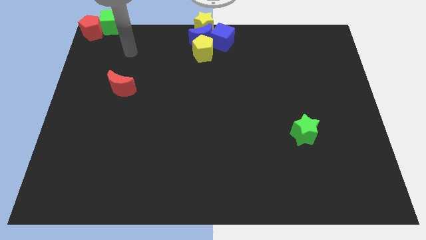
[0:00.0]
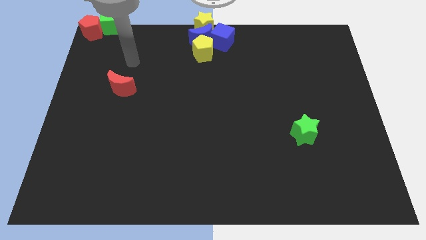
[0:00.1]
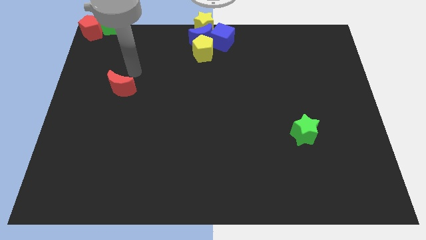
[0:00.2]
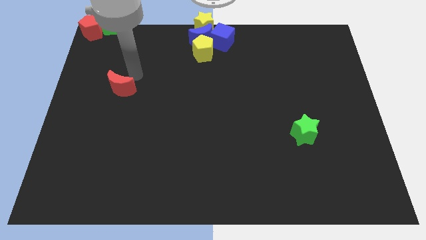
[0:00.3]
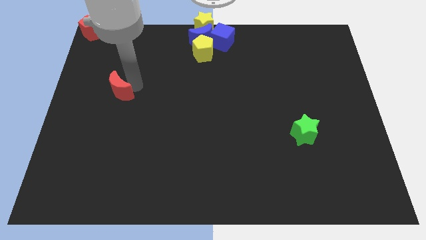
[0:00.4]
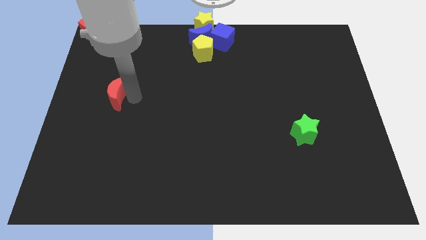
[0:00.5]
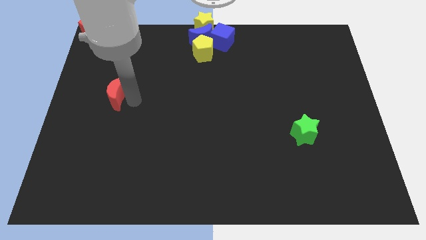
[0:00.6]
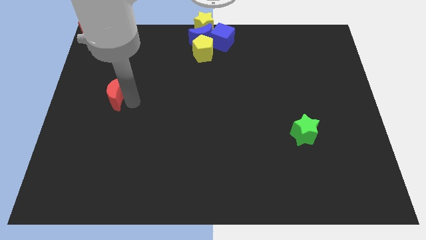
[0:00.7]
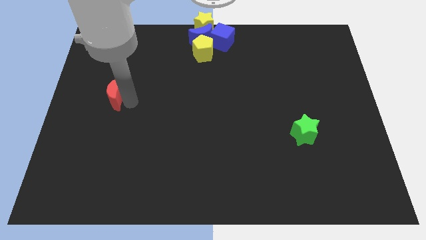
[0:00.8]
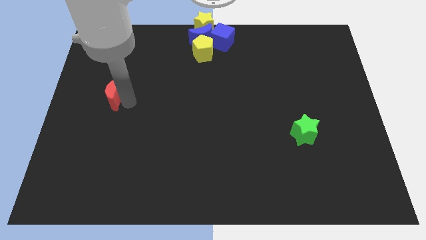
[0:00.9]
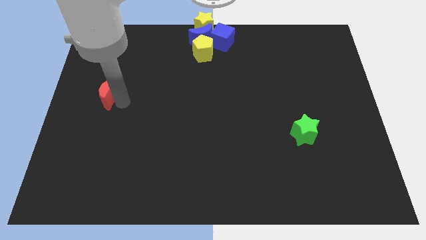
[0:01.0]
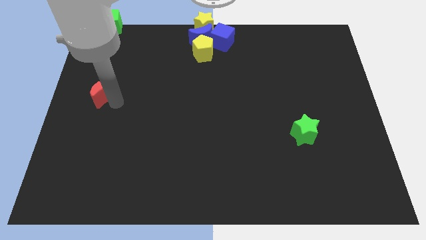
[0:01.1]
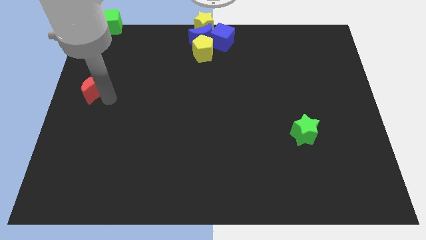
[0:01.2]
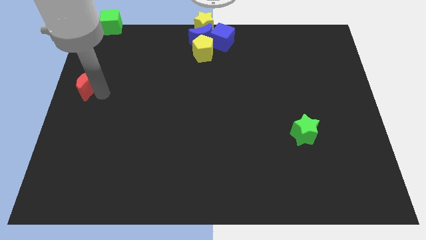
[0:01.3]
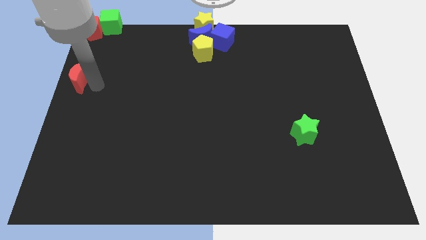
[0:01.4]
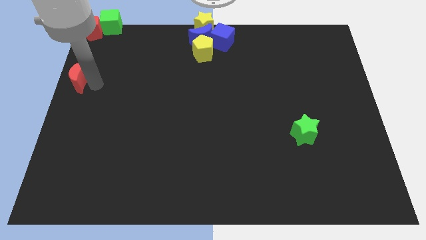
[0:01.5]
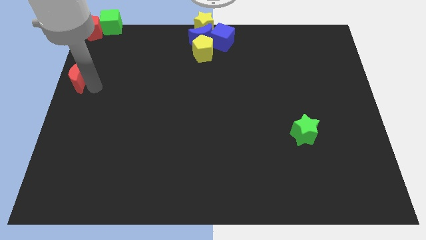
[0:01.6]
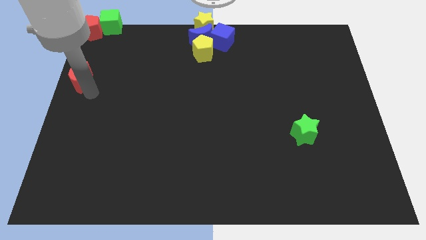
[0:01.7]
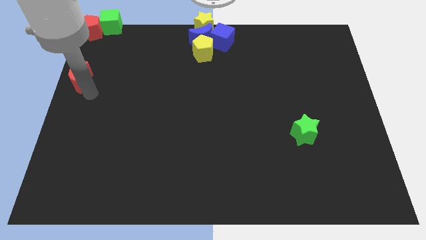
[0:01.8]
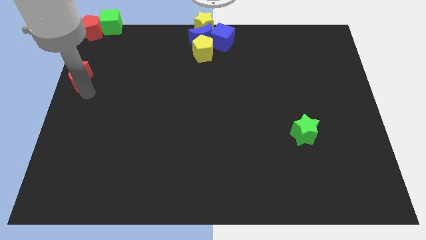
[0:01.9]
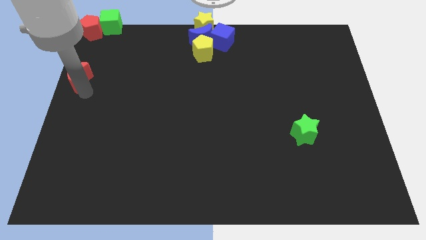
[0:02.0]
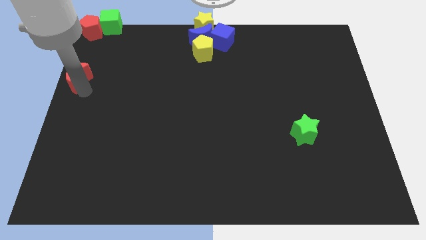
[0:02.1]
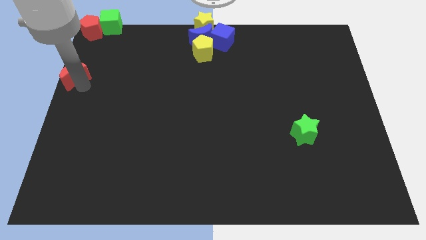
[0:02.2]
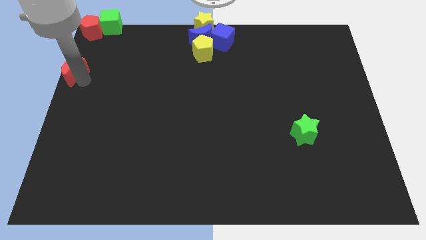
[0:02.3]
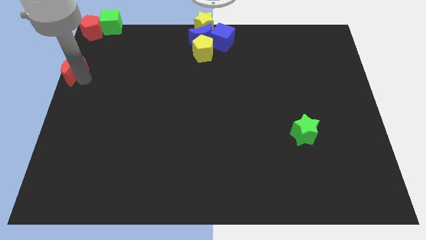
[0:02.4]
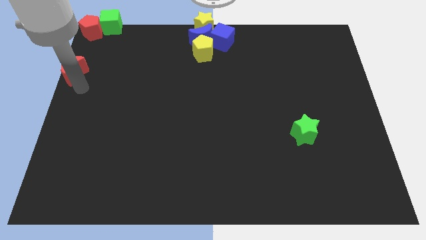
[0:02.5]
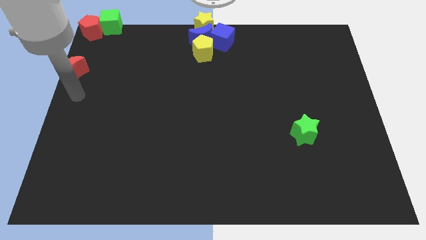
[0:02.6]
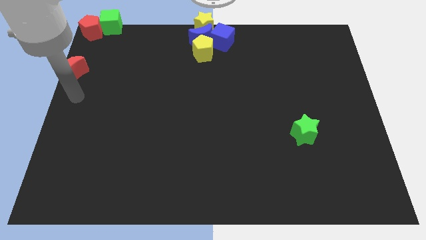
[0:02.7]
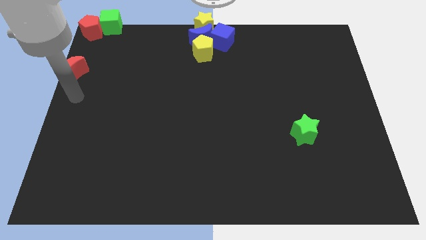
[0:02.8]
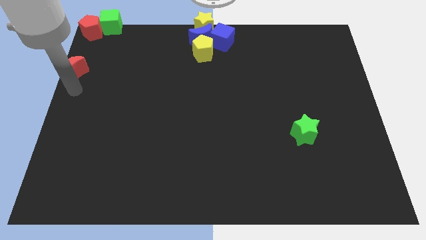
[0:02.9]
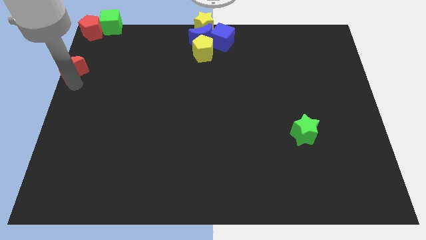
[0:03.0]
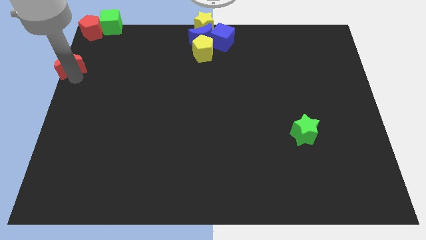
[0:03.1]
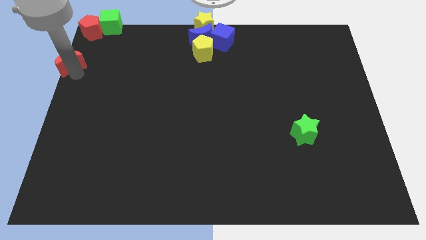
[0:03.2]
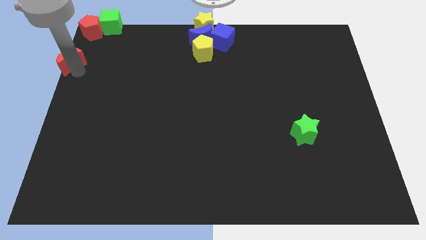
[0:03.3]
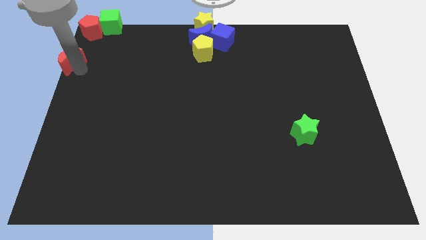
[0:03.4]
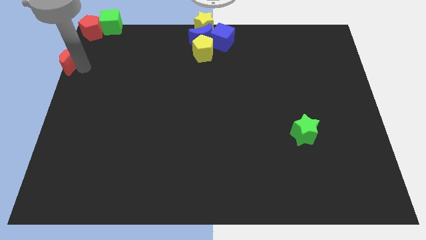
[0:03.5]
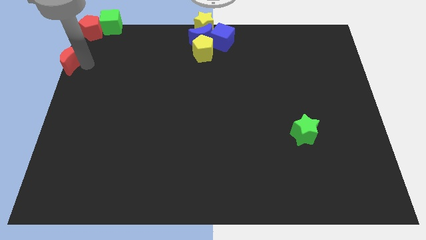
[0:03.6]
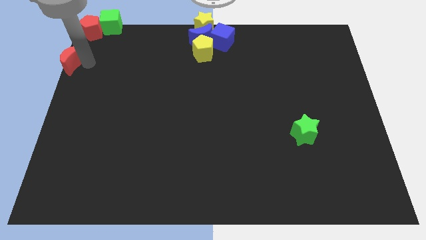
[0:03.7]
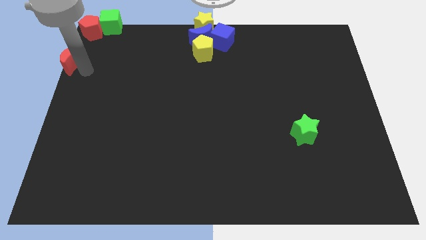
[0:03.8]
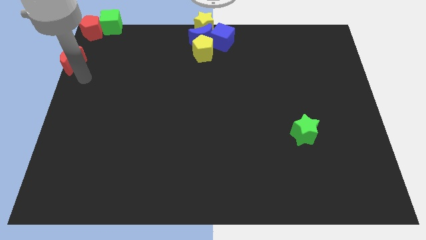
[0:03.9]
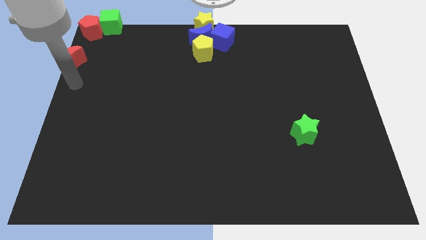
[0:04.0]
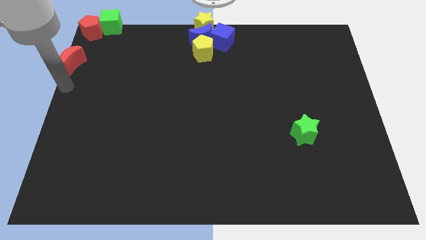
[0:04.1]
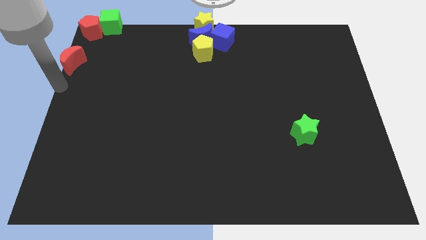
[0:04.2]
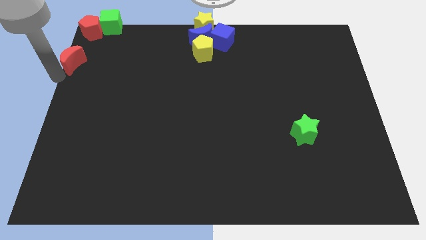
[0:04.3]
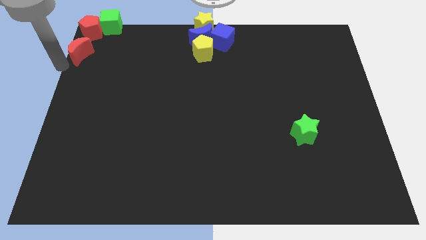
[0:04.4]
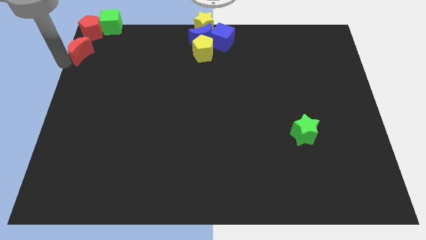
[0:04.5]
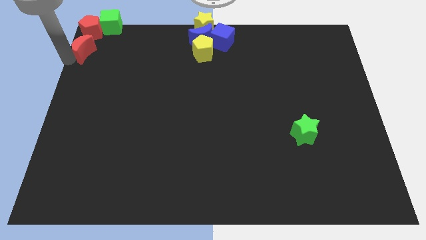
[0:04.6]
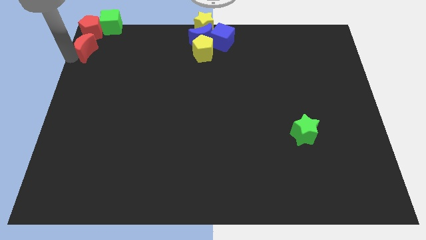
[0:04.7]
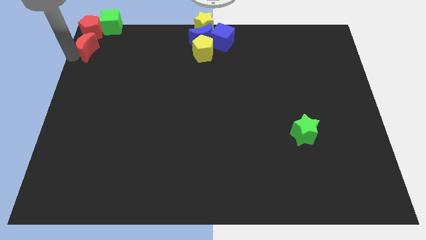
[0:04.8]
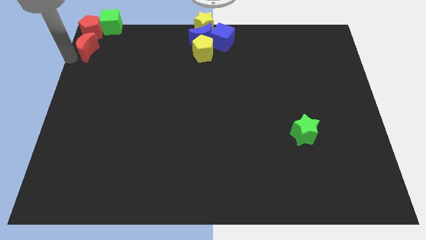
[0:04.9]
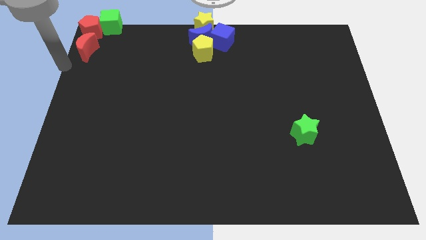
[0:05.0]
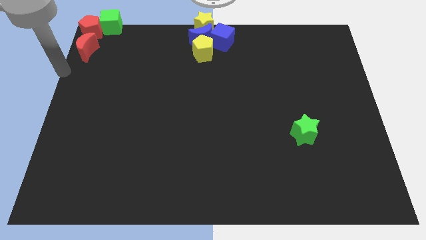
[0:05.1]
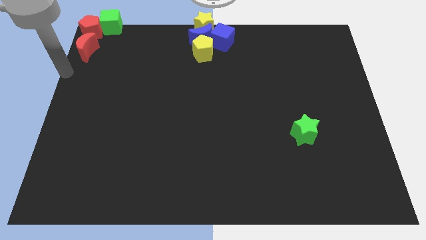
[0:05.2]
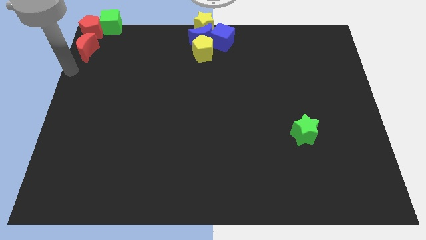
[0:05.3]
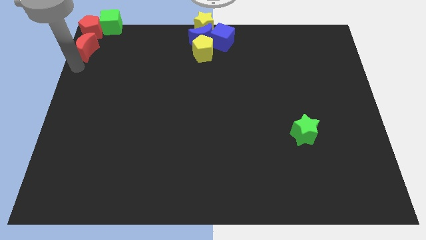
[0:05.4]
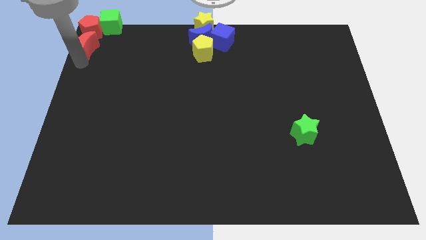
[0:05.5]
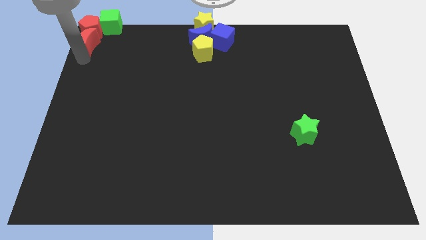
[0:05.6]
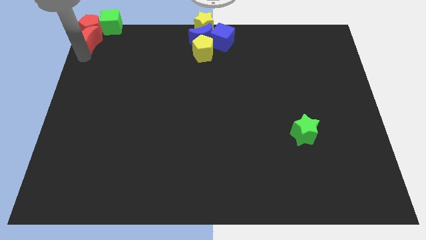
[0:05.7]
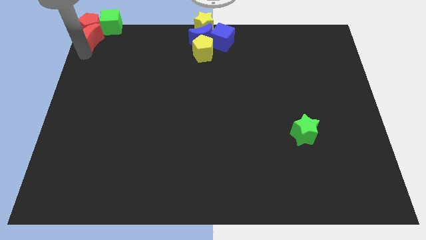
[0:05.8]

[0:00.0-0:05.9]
push the red moon towards the top left corner of the board

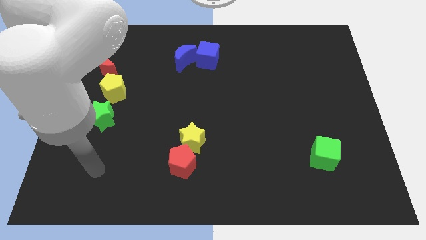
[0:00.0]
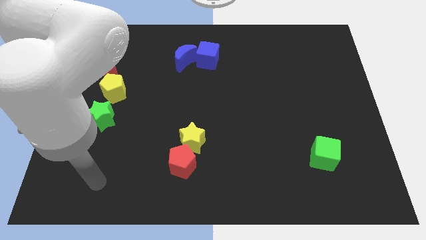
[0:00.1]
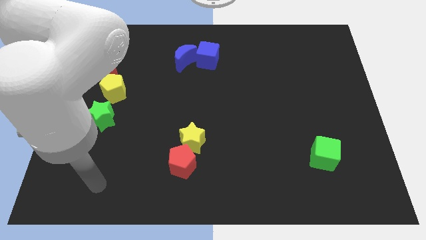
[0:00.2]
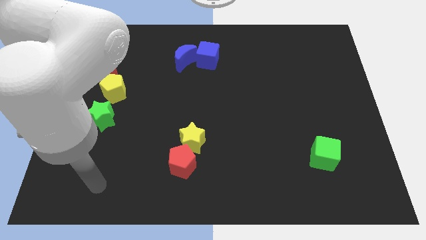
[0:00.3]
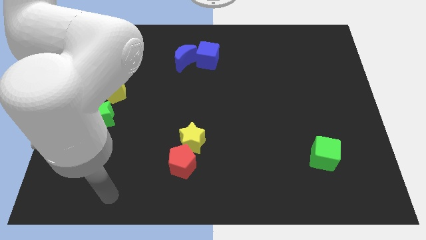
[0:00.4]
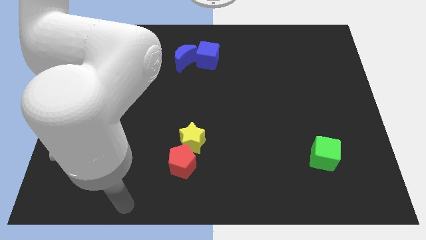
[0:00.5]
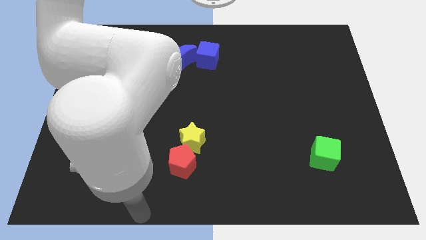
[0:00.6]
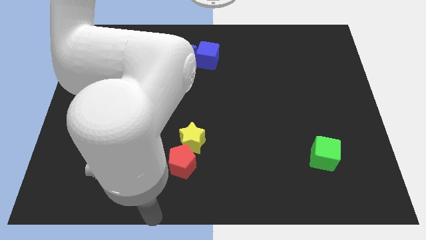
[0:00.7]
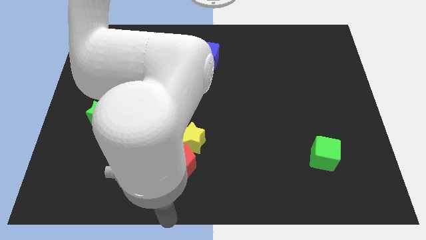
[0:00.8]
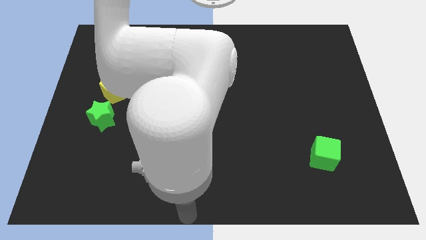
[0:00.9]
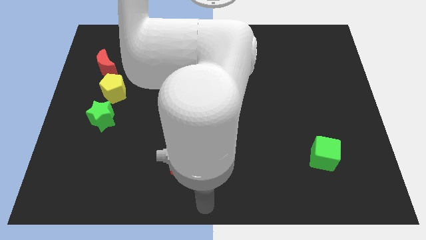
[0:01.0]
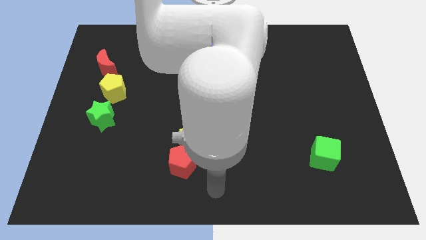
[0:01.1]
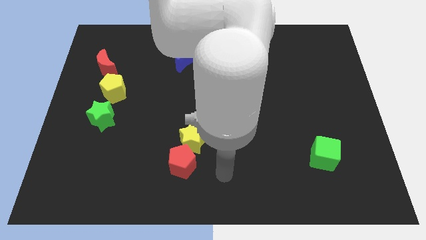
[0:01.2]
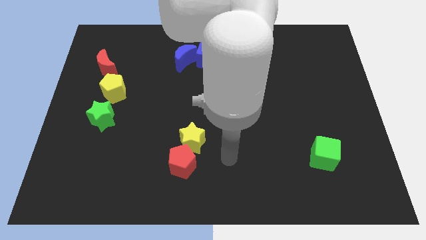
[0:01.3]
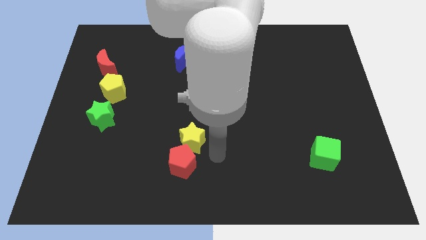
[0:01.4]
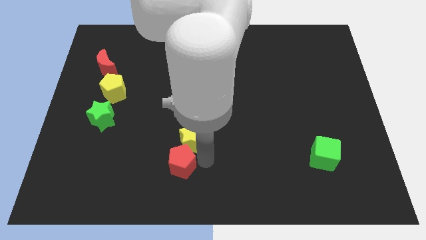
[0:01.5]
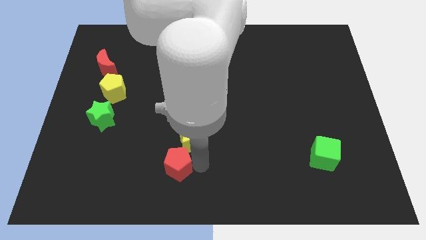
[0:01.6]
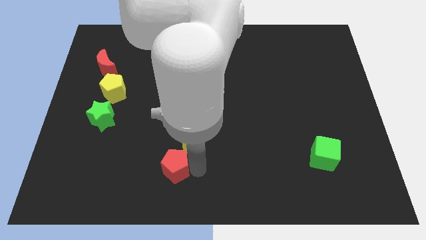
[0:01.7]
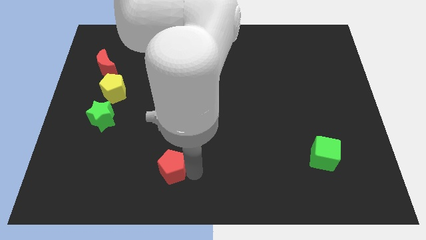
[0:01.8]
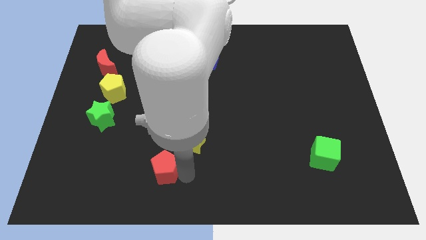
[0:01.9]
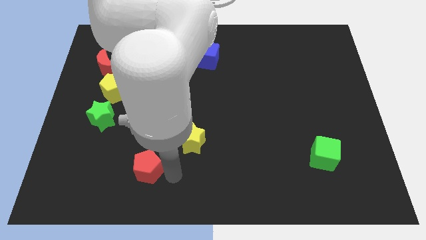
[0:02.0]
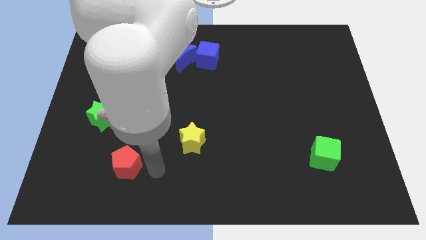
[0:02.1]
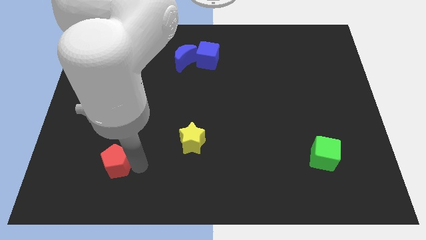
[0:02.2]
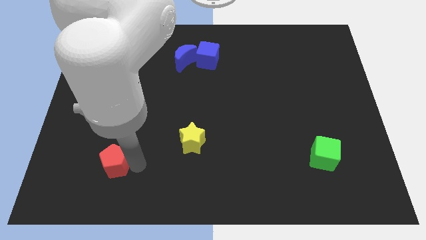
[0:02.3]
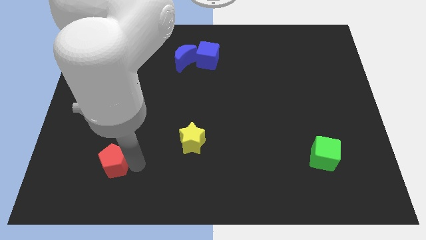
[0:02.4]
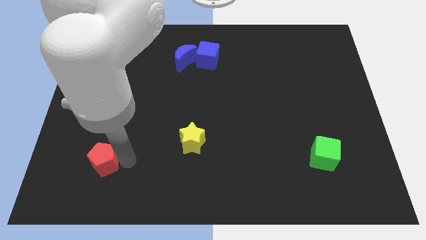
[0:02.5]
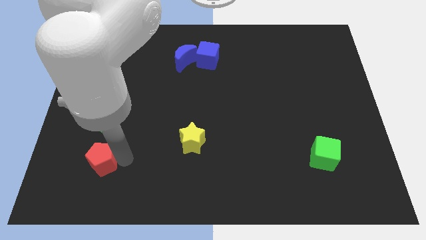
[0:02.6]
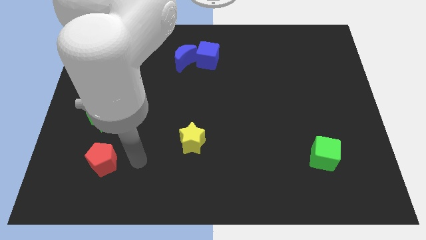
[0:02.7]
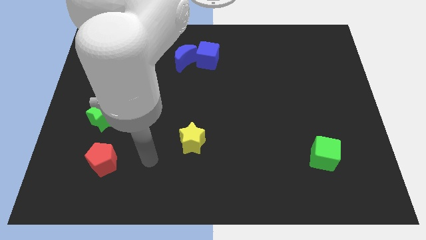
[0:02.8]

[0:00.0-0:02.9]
move the red pentagon to the bottom of the green star
